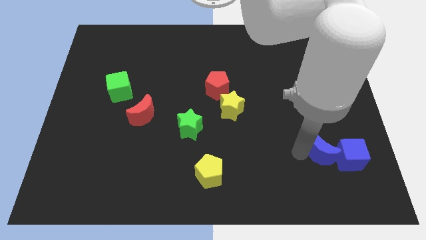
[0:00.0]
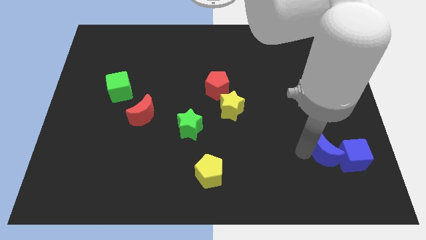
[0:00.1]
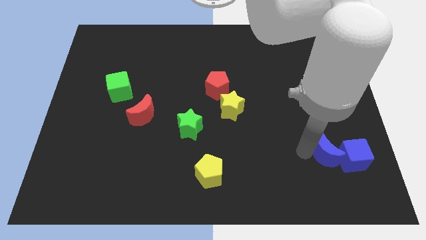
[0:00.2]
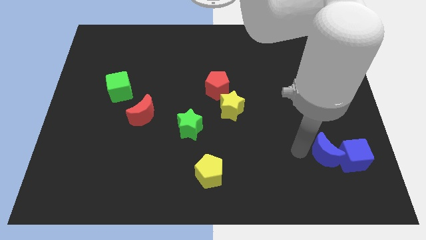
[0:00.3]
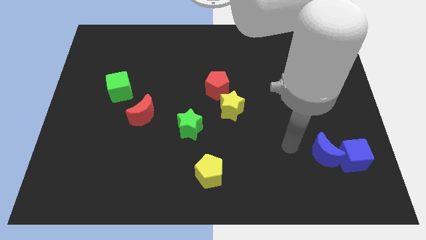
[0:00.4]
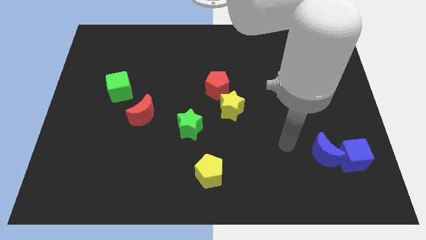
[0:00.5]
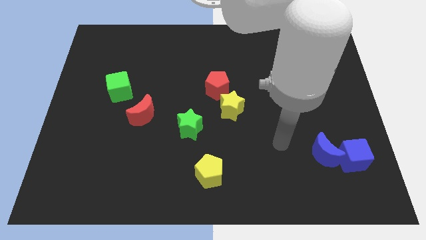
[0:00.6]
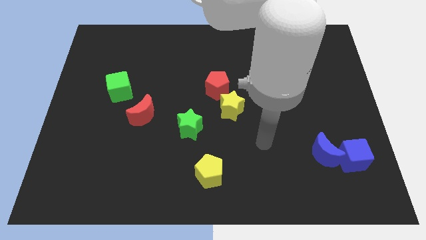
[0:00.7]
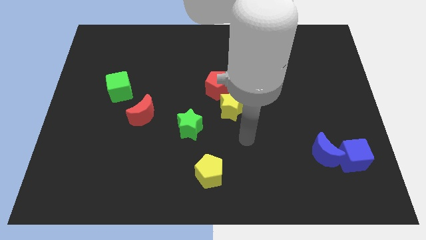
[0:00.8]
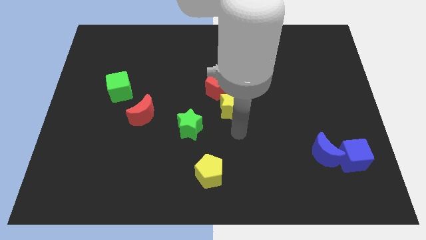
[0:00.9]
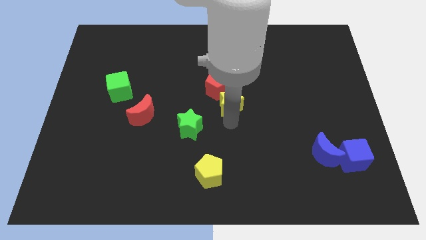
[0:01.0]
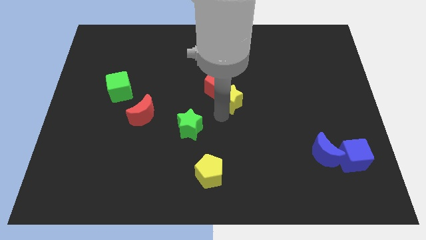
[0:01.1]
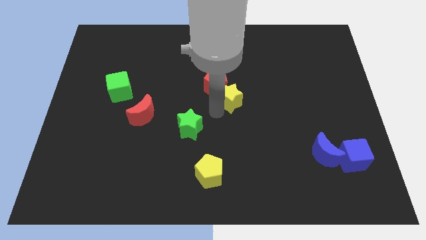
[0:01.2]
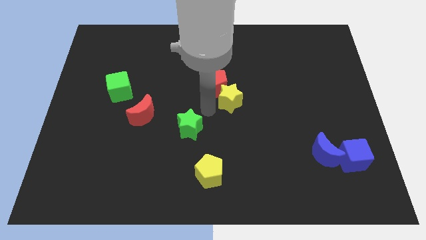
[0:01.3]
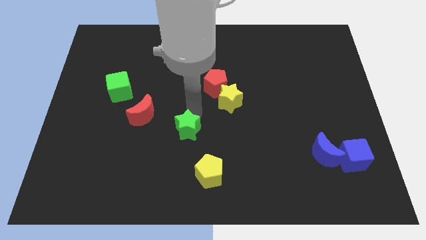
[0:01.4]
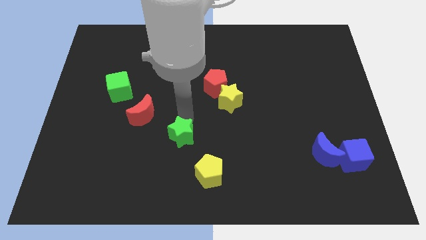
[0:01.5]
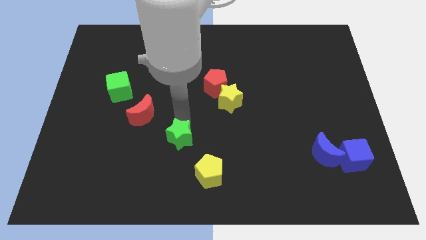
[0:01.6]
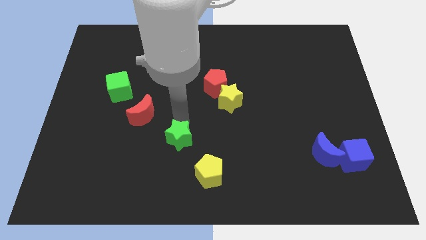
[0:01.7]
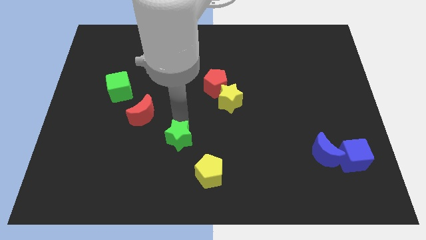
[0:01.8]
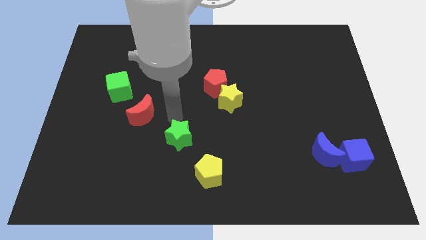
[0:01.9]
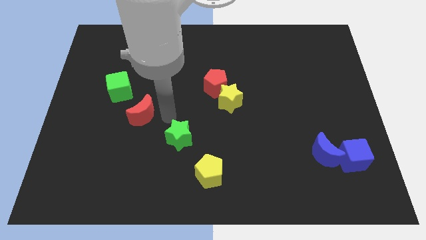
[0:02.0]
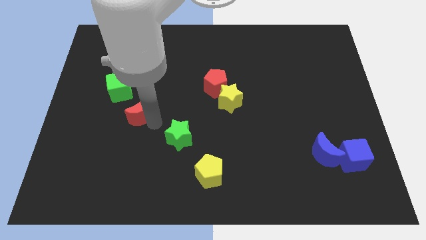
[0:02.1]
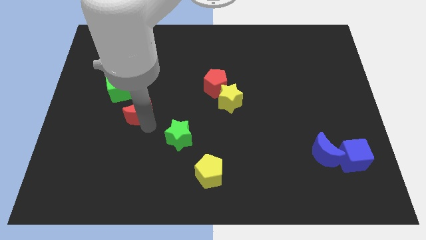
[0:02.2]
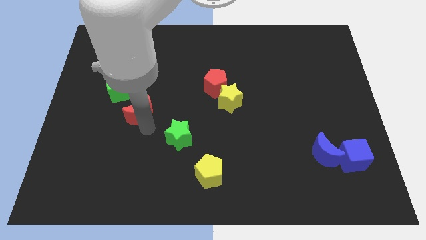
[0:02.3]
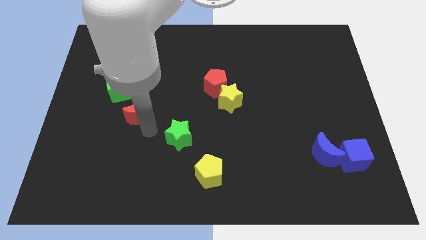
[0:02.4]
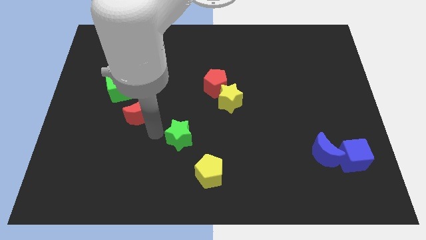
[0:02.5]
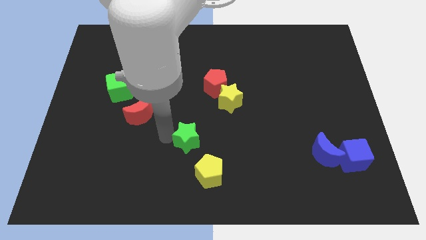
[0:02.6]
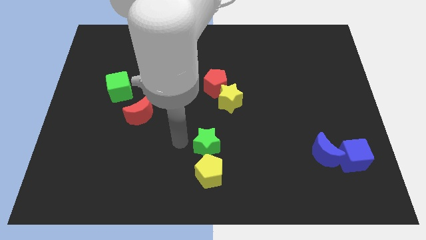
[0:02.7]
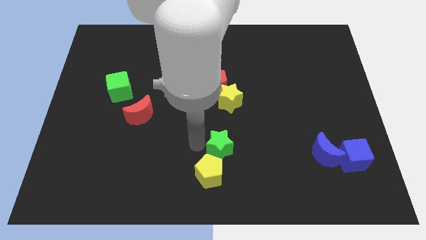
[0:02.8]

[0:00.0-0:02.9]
place the green star in between the yellow star and yellow pentagon

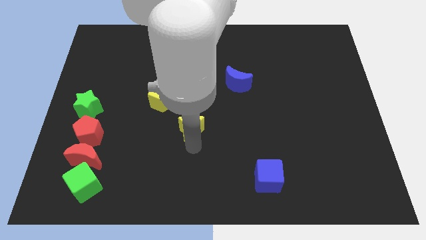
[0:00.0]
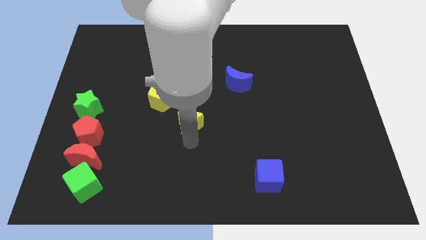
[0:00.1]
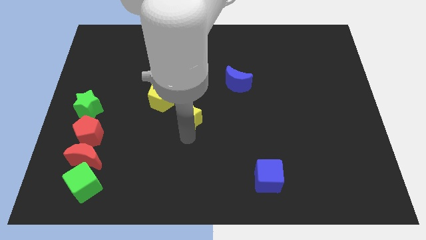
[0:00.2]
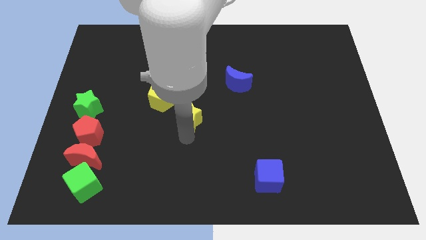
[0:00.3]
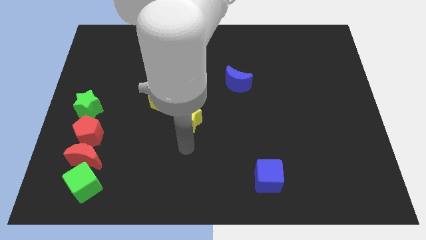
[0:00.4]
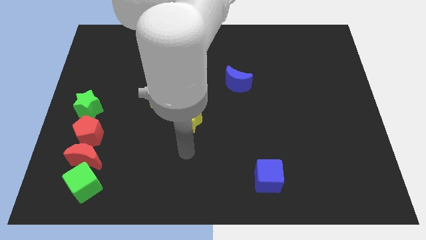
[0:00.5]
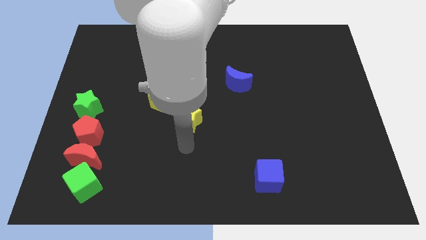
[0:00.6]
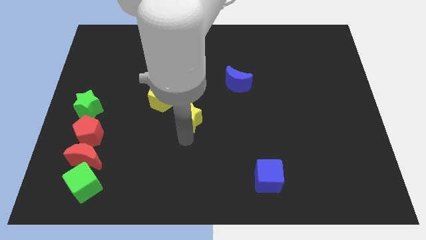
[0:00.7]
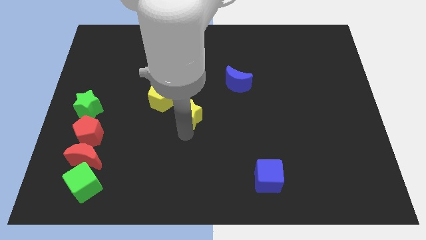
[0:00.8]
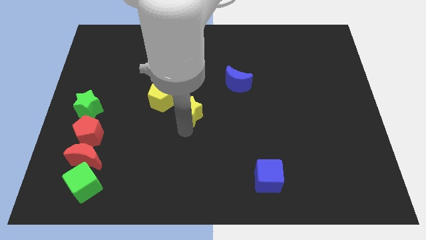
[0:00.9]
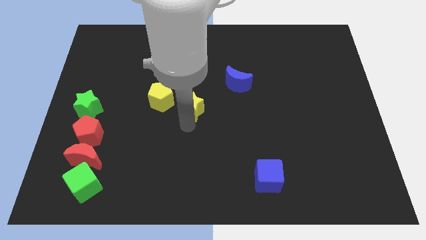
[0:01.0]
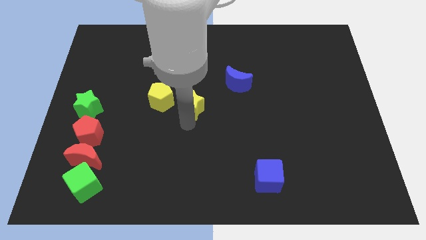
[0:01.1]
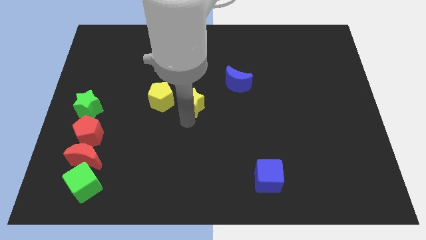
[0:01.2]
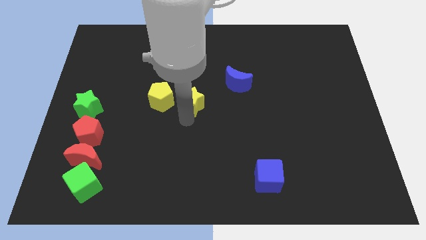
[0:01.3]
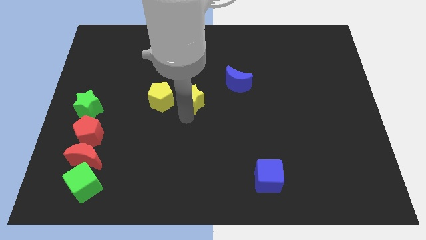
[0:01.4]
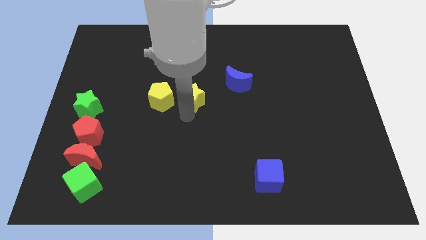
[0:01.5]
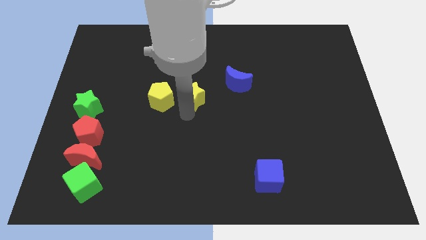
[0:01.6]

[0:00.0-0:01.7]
put the yellow star on the right side of the yellow pentagon

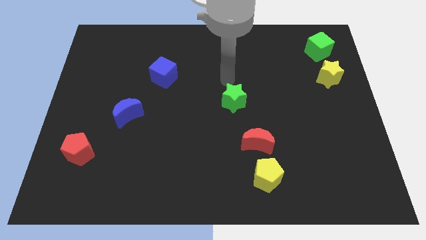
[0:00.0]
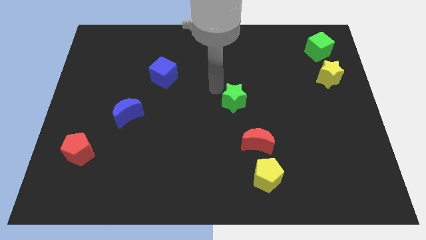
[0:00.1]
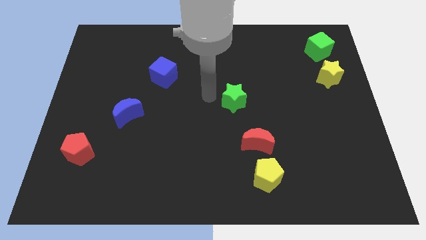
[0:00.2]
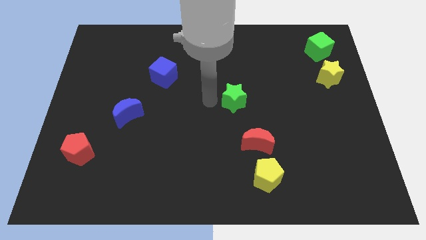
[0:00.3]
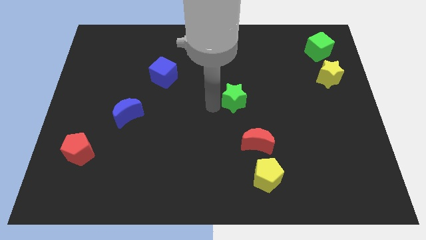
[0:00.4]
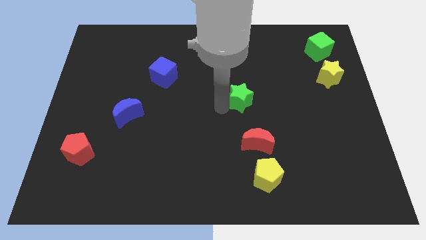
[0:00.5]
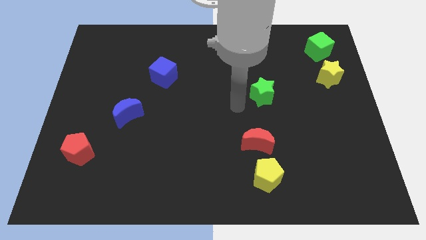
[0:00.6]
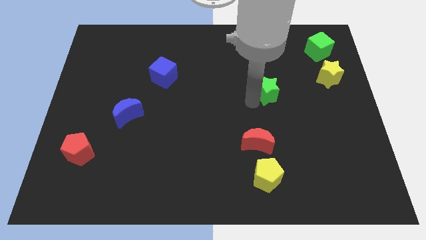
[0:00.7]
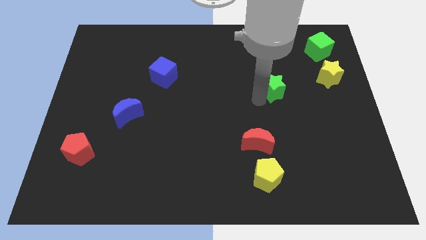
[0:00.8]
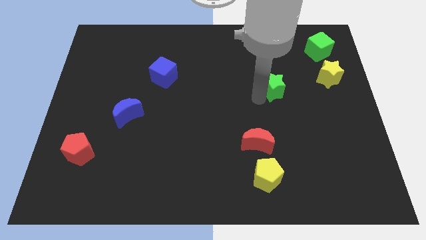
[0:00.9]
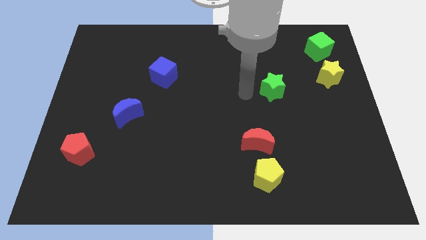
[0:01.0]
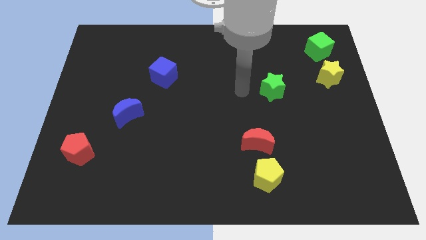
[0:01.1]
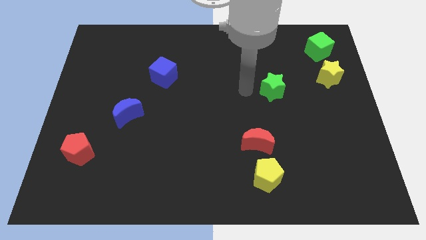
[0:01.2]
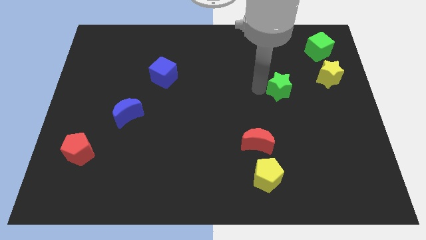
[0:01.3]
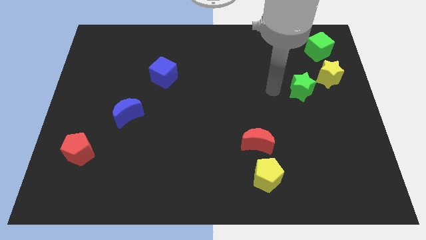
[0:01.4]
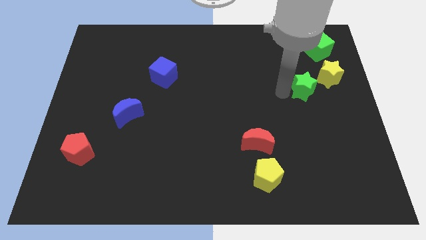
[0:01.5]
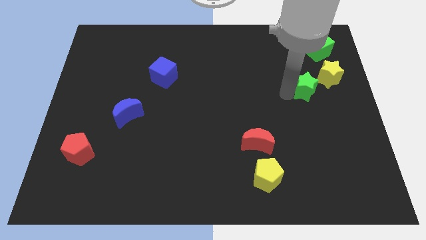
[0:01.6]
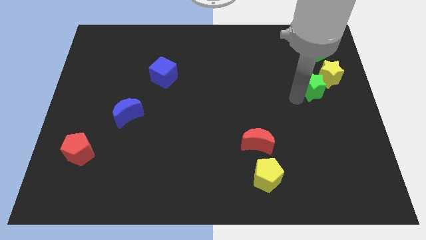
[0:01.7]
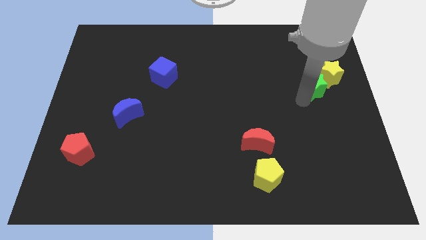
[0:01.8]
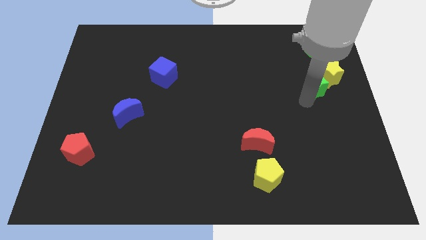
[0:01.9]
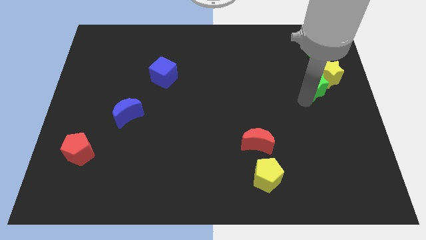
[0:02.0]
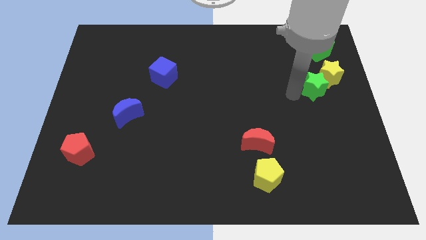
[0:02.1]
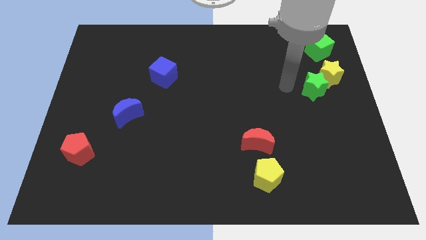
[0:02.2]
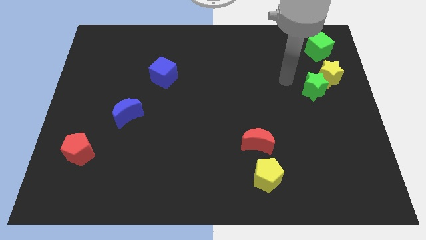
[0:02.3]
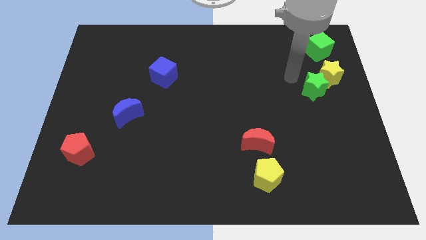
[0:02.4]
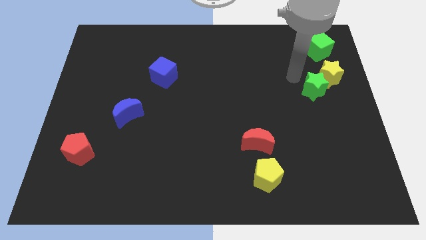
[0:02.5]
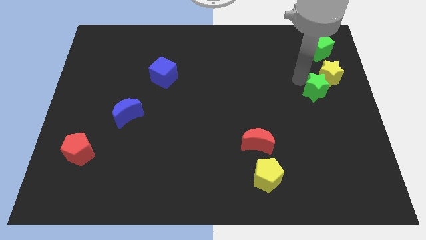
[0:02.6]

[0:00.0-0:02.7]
push green star close to yellow star

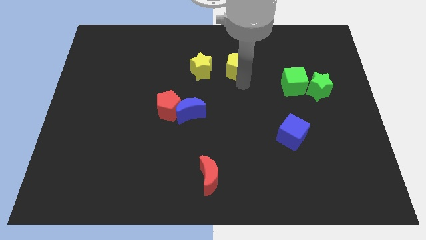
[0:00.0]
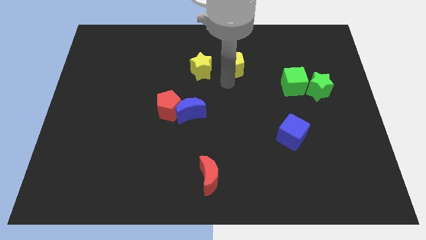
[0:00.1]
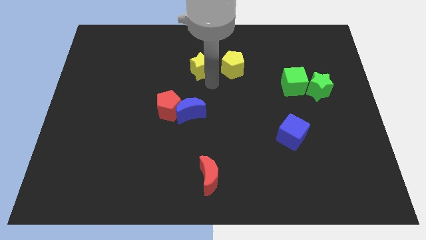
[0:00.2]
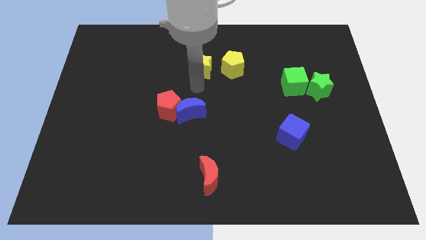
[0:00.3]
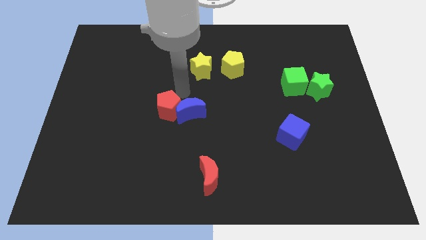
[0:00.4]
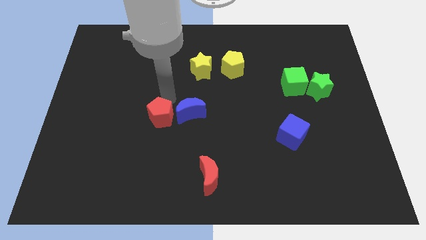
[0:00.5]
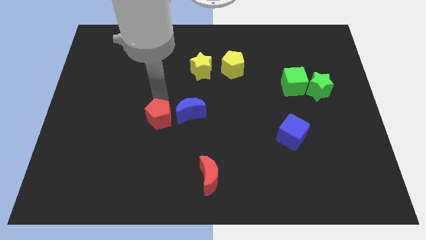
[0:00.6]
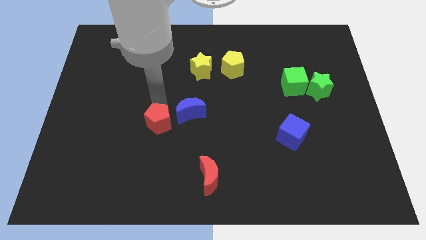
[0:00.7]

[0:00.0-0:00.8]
place red pentagon to the left of blue moon

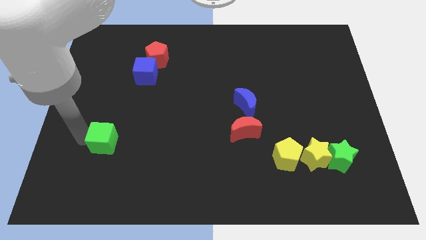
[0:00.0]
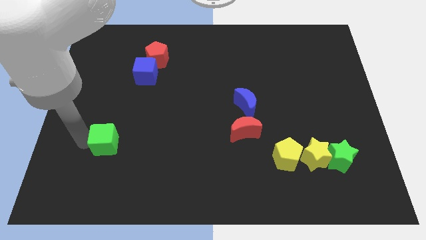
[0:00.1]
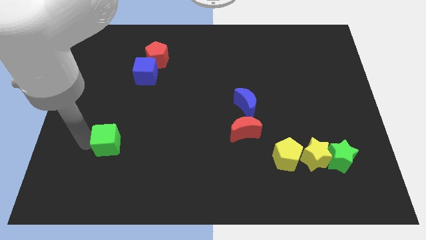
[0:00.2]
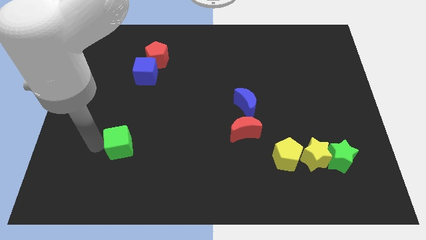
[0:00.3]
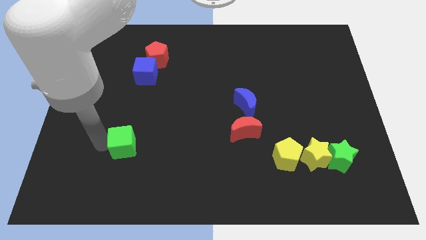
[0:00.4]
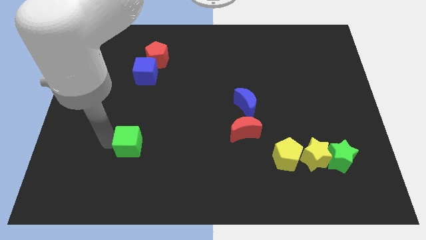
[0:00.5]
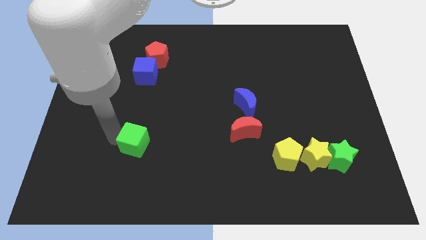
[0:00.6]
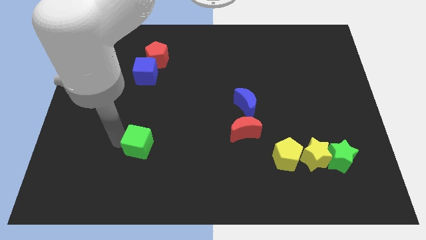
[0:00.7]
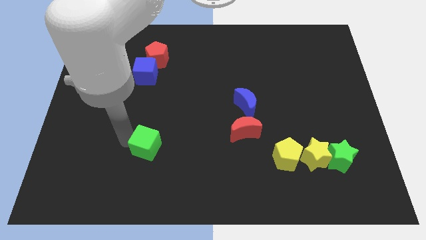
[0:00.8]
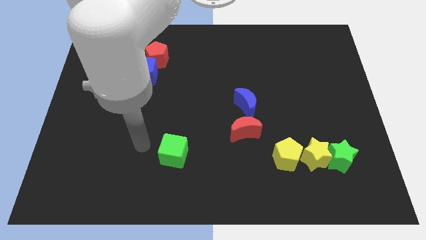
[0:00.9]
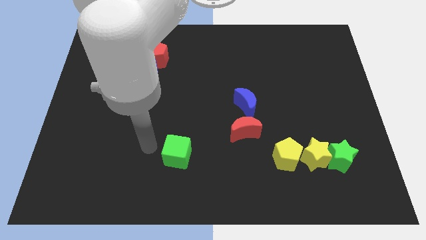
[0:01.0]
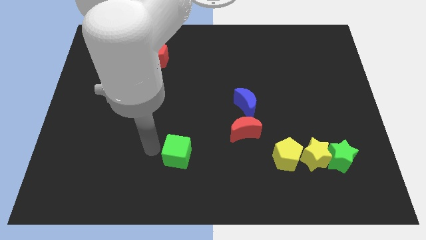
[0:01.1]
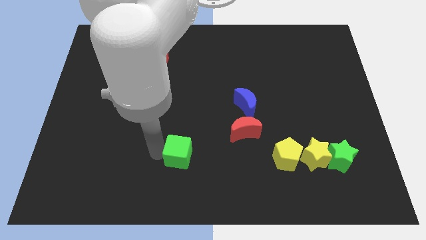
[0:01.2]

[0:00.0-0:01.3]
push the green cube to the bottom left of the red moon
